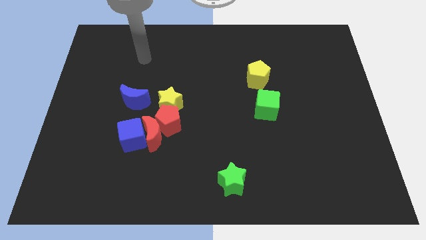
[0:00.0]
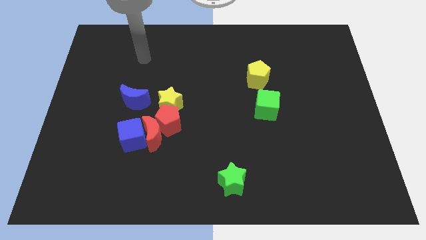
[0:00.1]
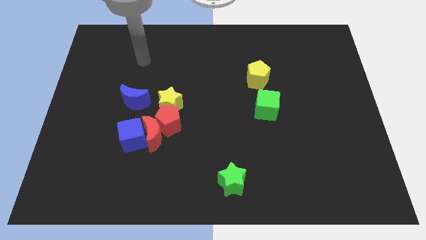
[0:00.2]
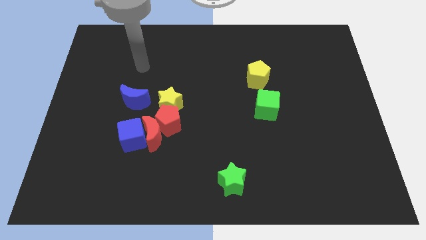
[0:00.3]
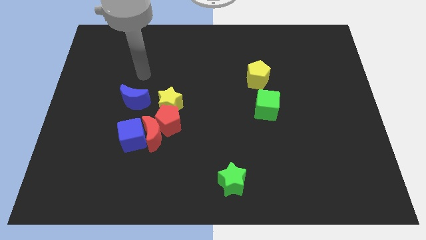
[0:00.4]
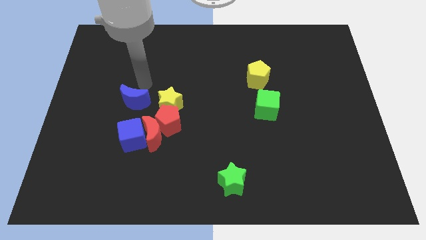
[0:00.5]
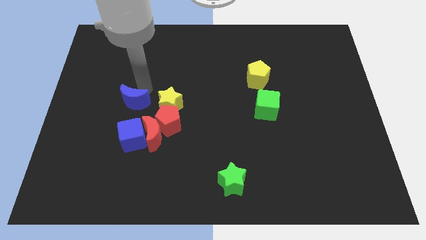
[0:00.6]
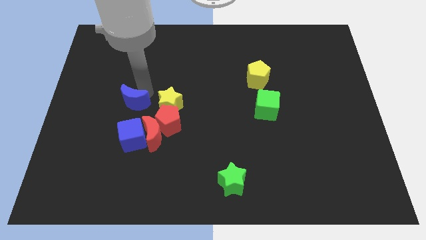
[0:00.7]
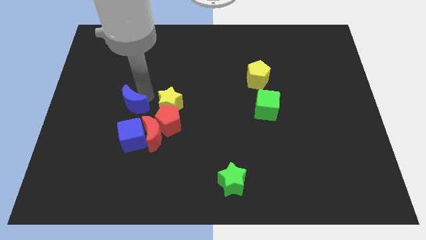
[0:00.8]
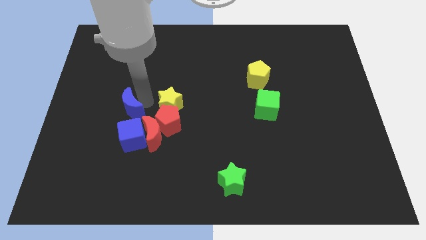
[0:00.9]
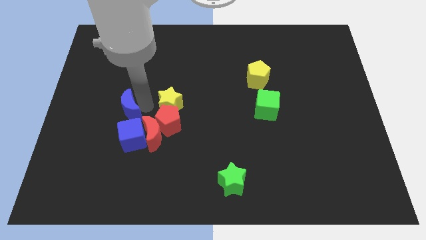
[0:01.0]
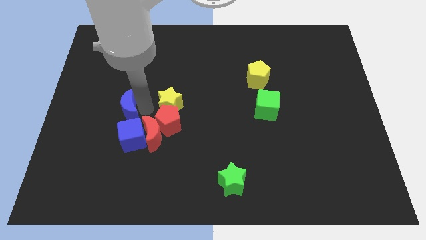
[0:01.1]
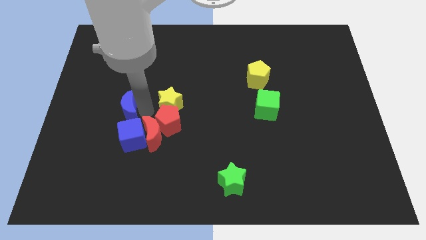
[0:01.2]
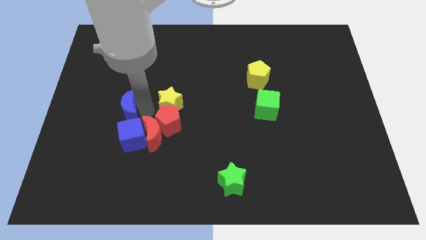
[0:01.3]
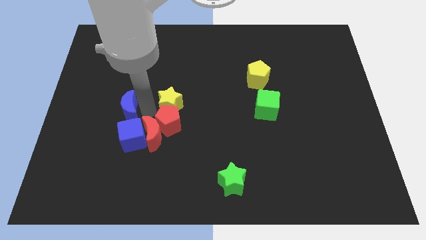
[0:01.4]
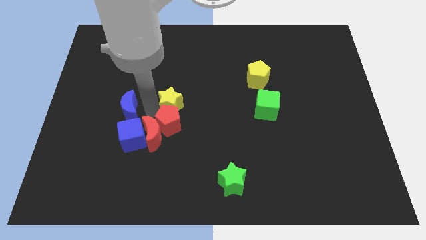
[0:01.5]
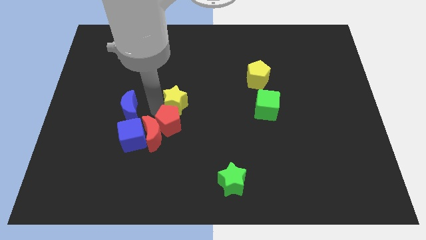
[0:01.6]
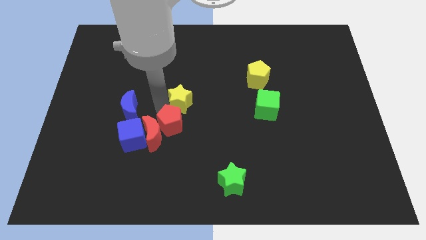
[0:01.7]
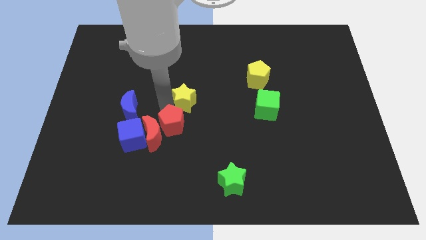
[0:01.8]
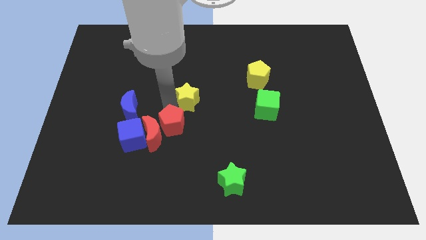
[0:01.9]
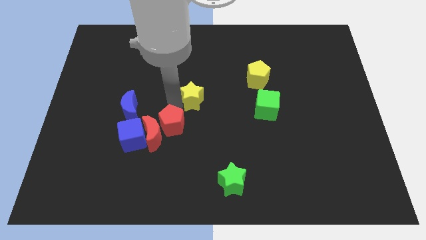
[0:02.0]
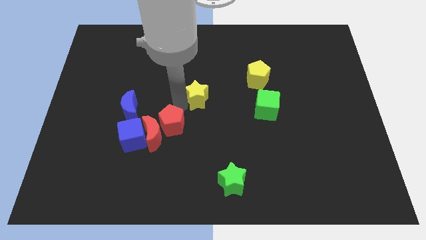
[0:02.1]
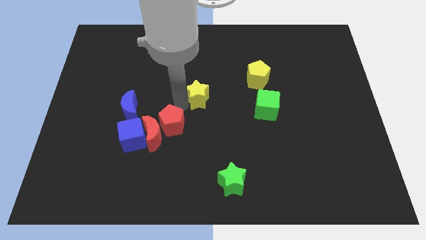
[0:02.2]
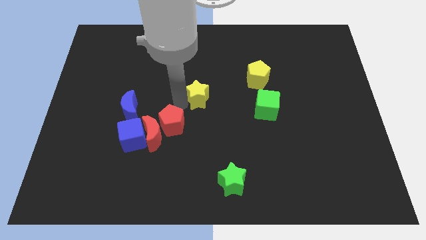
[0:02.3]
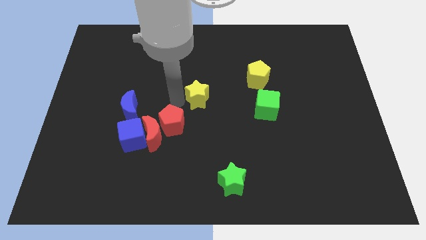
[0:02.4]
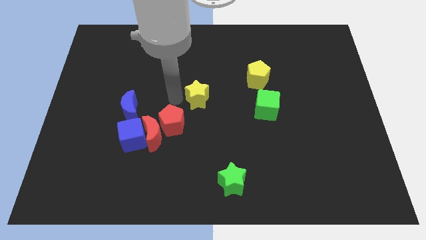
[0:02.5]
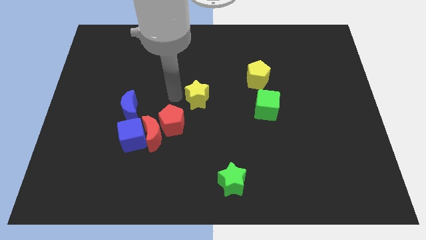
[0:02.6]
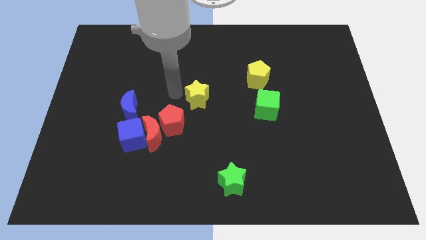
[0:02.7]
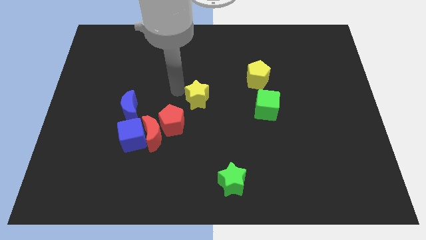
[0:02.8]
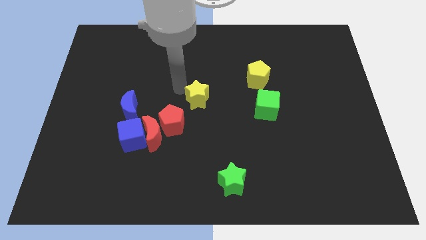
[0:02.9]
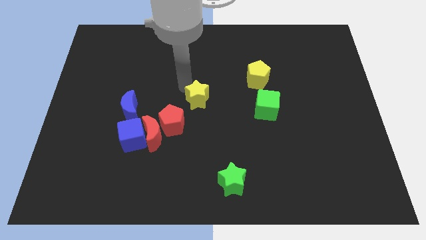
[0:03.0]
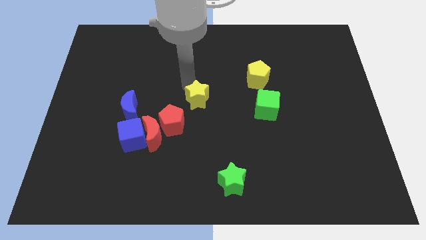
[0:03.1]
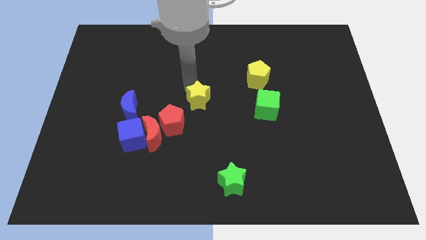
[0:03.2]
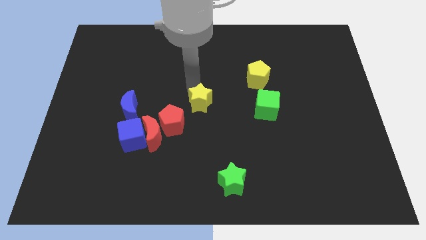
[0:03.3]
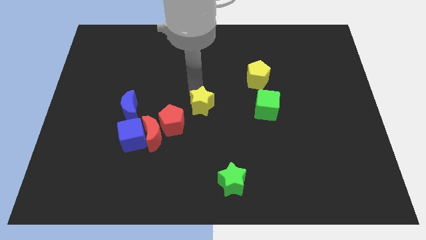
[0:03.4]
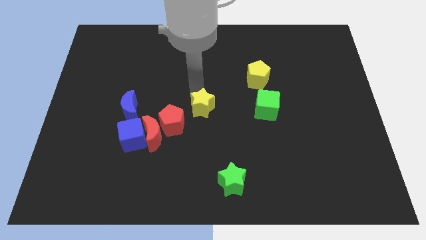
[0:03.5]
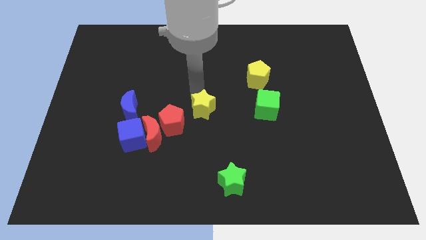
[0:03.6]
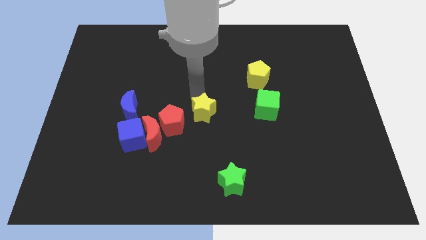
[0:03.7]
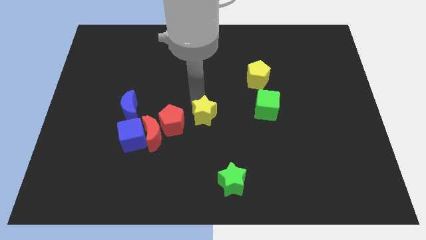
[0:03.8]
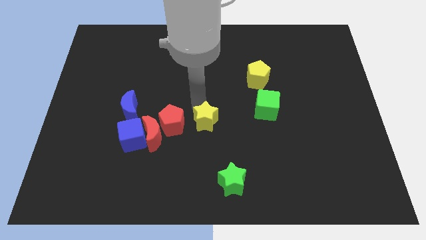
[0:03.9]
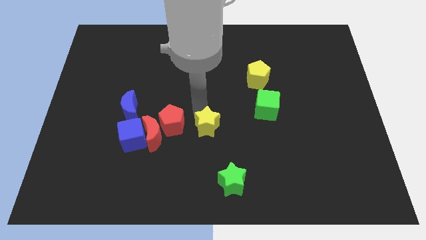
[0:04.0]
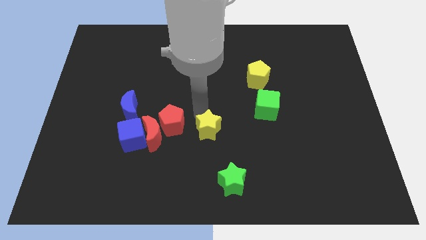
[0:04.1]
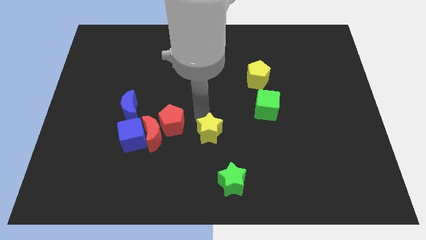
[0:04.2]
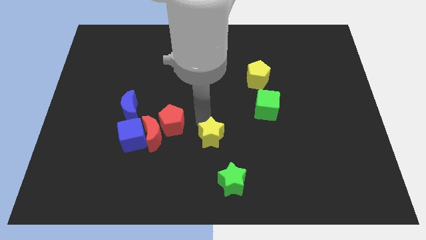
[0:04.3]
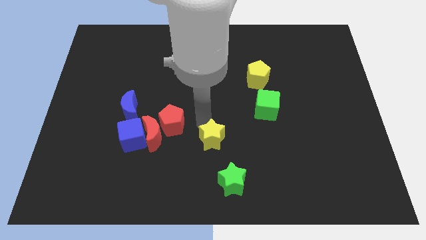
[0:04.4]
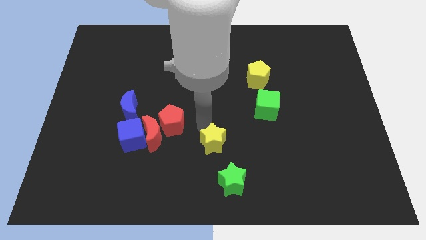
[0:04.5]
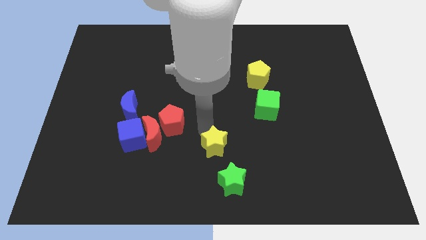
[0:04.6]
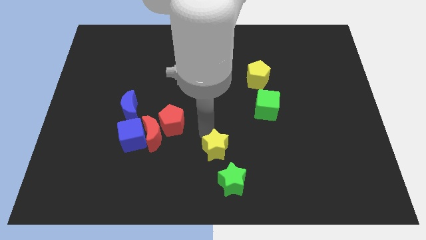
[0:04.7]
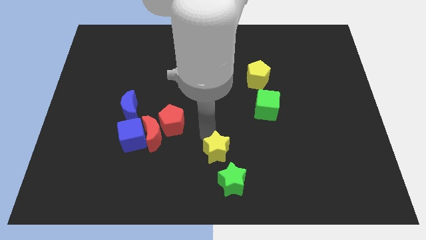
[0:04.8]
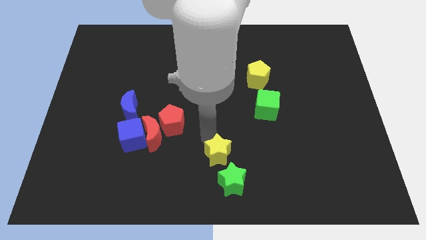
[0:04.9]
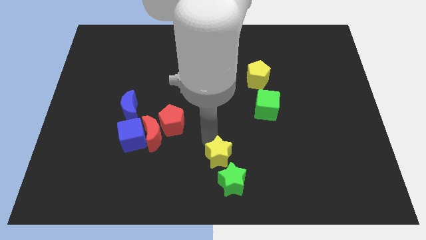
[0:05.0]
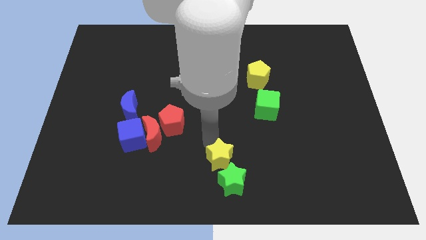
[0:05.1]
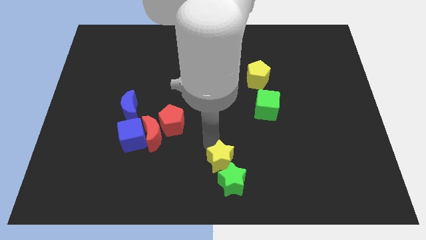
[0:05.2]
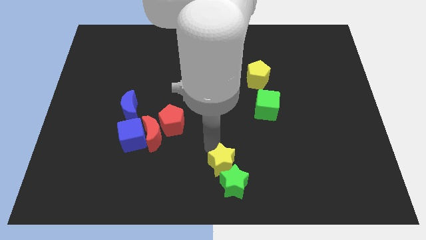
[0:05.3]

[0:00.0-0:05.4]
push the yellow star towards the green star

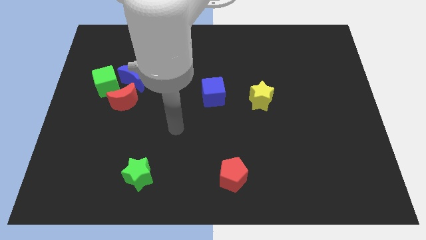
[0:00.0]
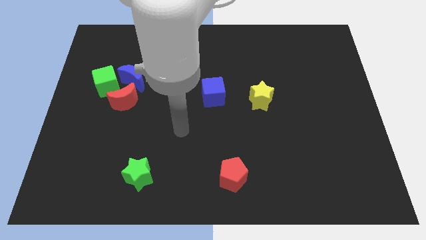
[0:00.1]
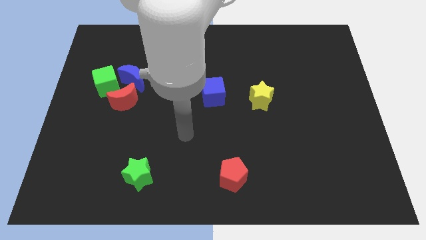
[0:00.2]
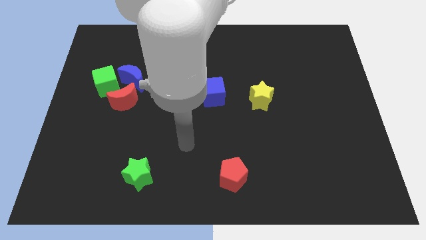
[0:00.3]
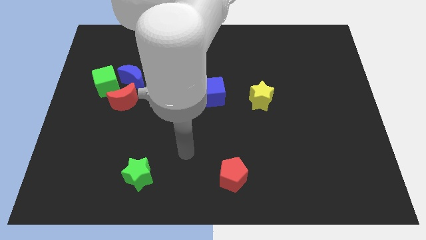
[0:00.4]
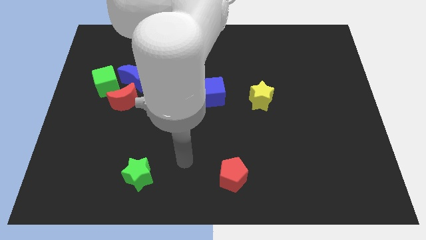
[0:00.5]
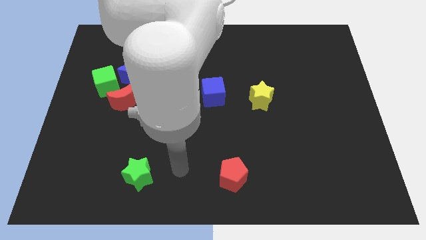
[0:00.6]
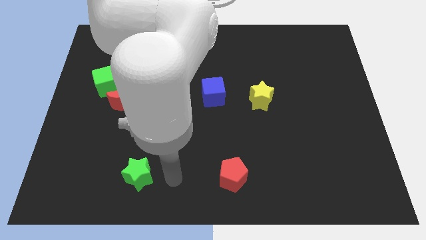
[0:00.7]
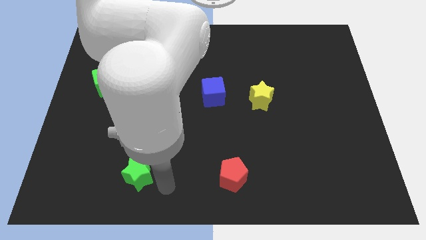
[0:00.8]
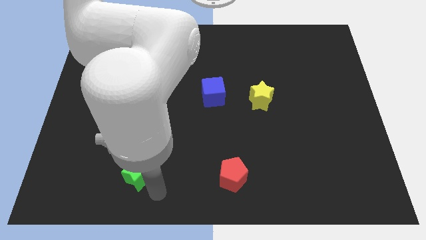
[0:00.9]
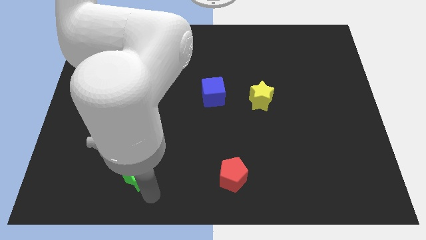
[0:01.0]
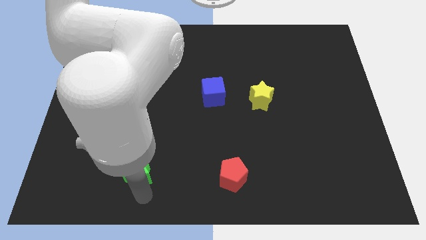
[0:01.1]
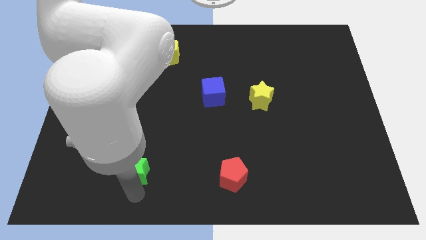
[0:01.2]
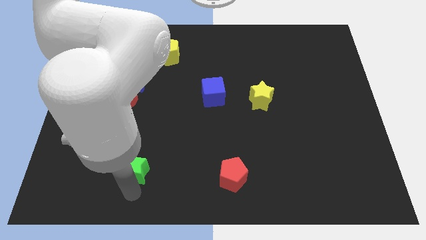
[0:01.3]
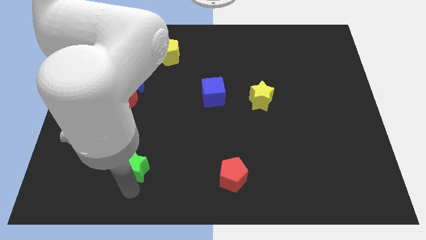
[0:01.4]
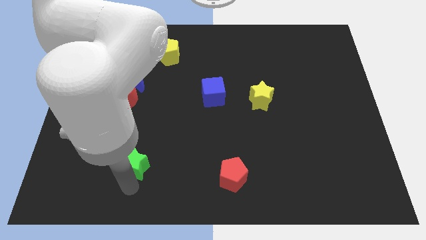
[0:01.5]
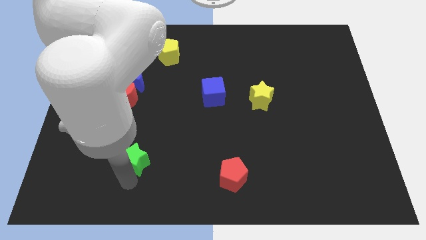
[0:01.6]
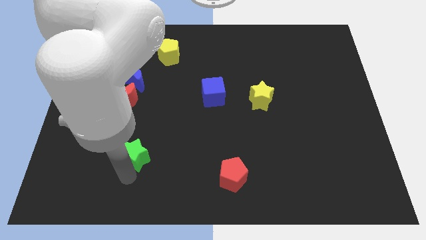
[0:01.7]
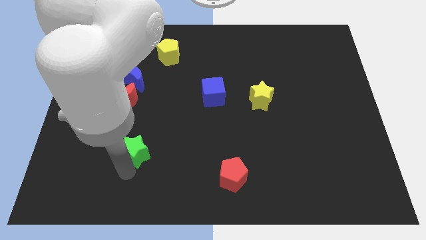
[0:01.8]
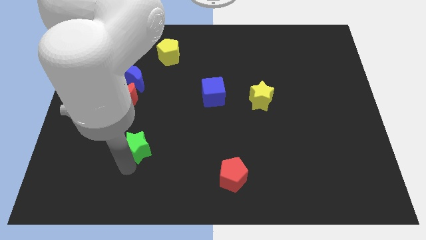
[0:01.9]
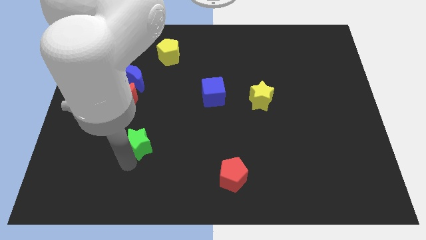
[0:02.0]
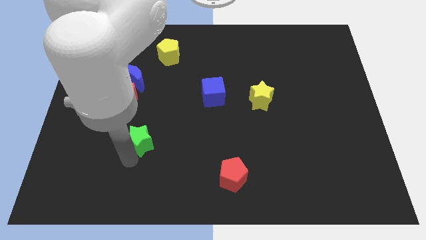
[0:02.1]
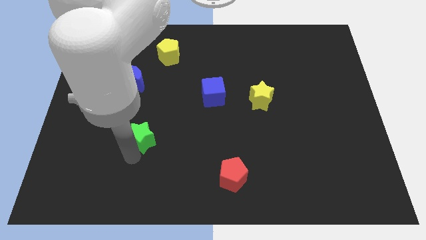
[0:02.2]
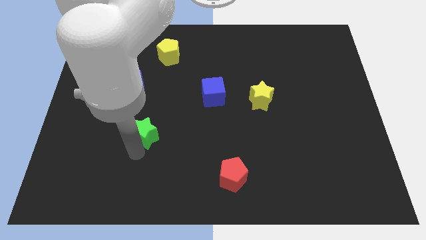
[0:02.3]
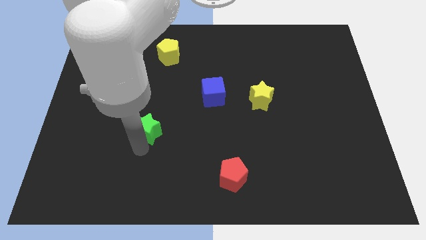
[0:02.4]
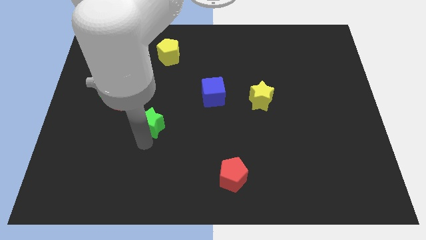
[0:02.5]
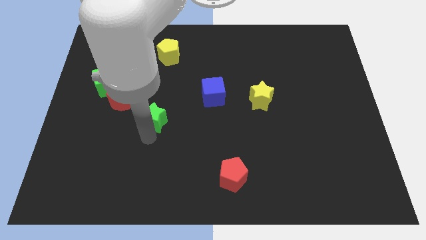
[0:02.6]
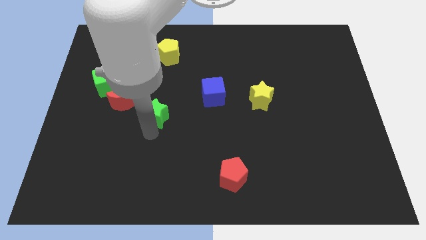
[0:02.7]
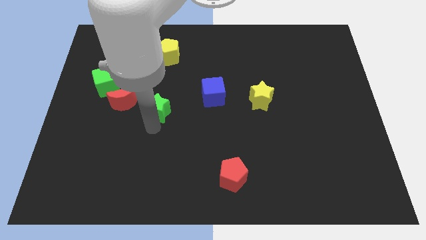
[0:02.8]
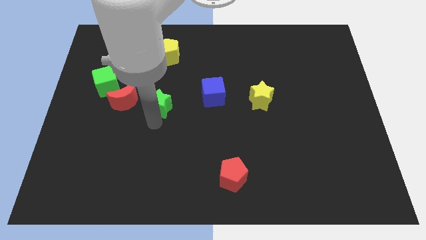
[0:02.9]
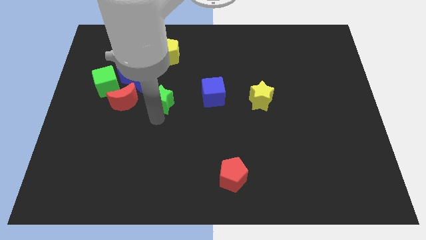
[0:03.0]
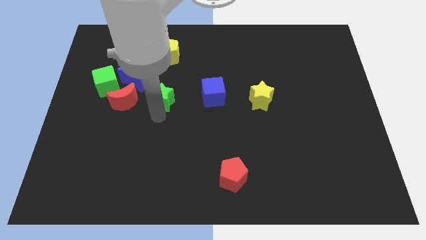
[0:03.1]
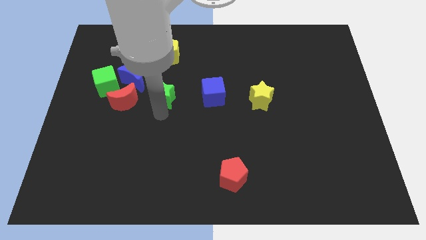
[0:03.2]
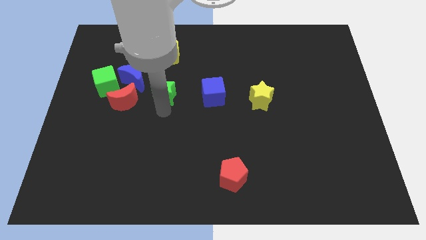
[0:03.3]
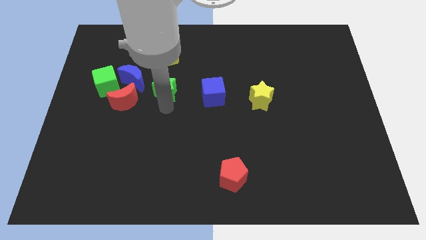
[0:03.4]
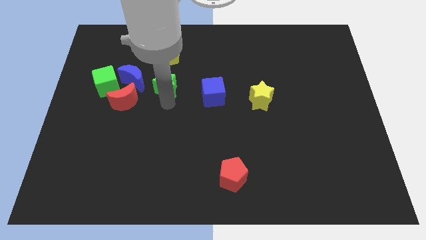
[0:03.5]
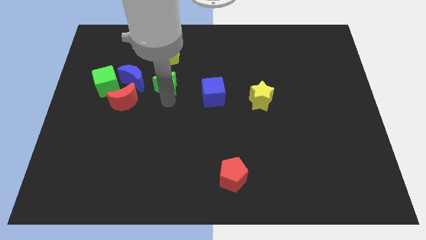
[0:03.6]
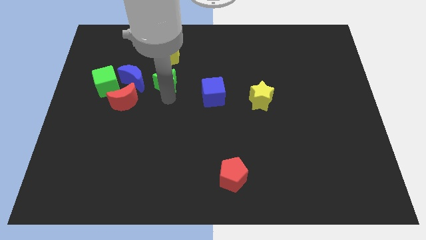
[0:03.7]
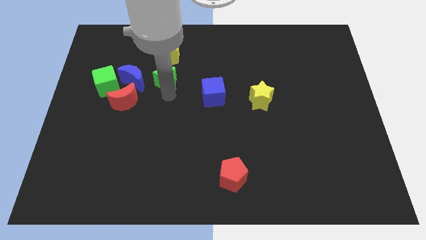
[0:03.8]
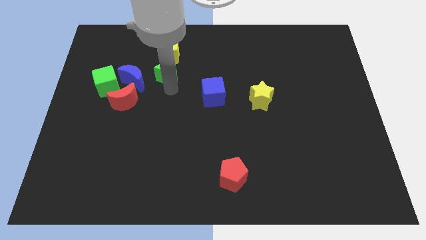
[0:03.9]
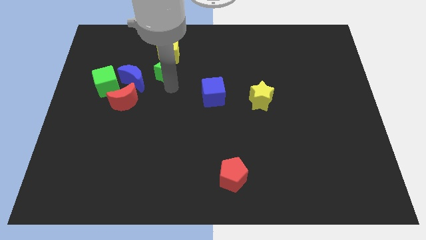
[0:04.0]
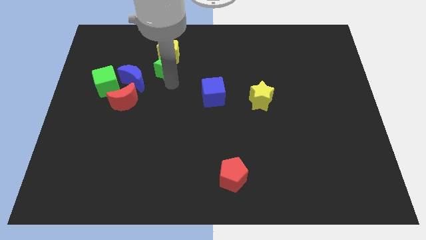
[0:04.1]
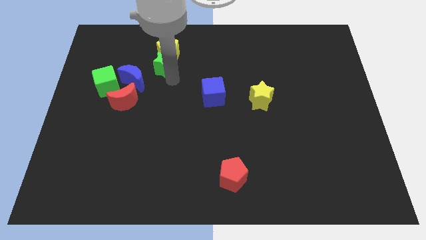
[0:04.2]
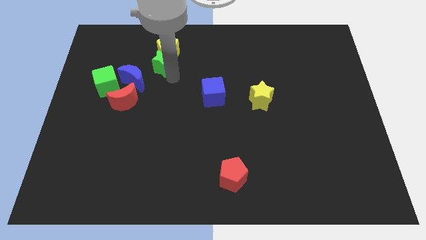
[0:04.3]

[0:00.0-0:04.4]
slide the green star close to the yellow pentagon
